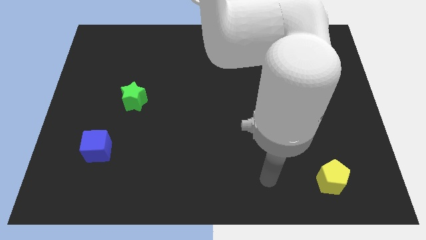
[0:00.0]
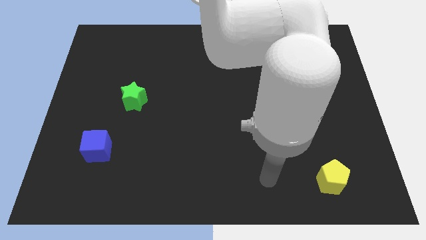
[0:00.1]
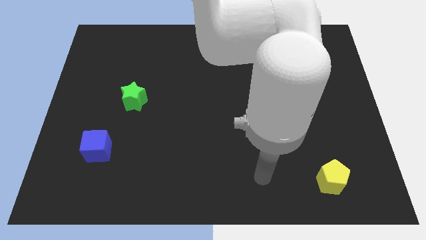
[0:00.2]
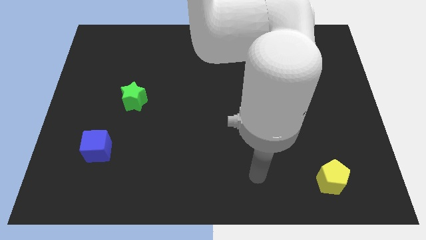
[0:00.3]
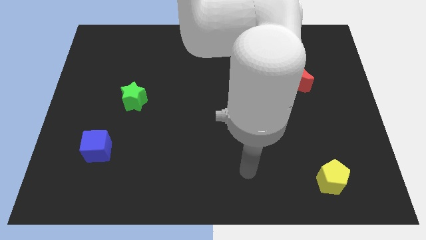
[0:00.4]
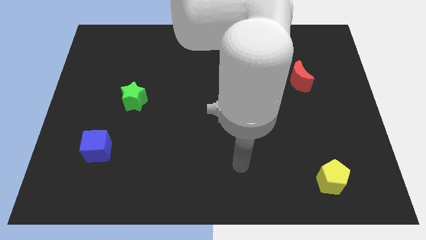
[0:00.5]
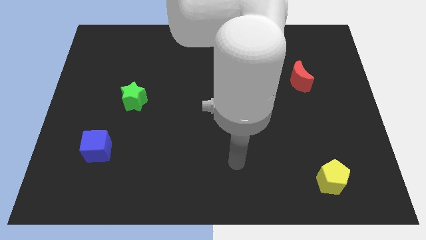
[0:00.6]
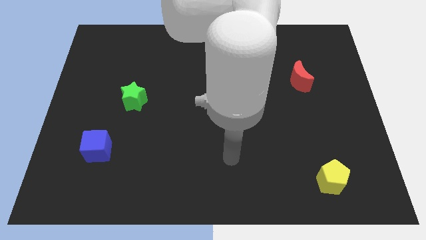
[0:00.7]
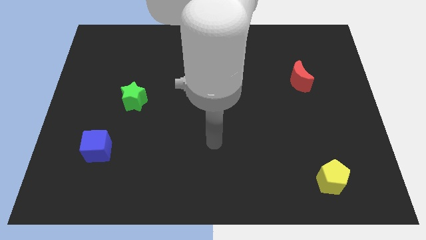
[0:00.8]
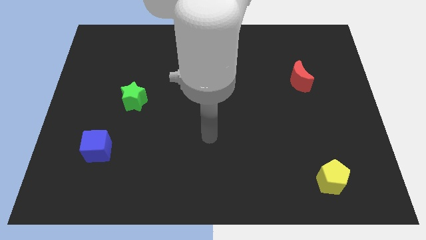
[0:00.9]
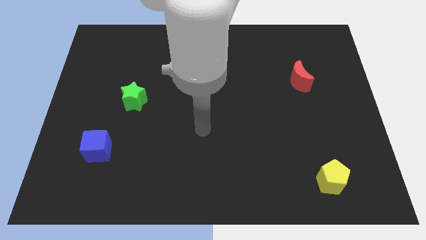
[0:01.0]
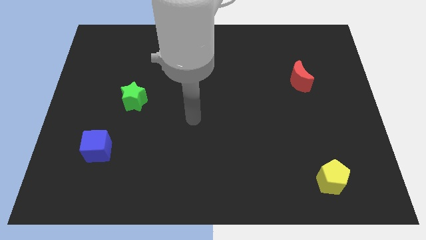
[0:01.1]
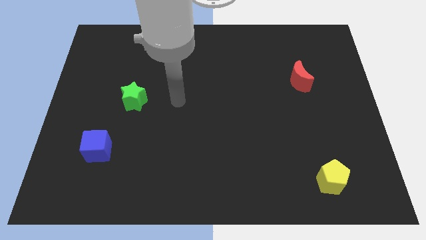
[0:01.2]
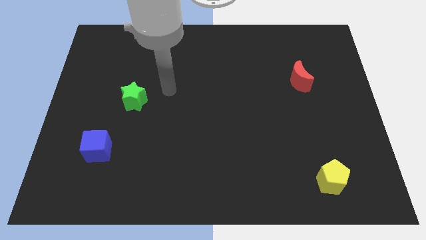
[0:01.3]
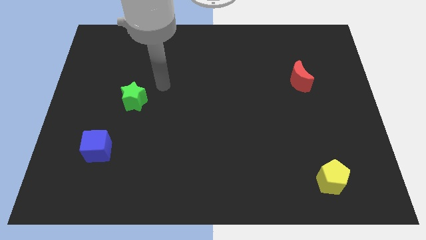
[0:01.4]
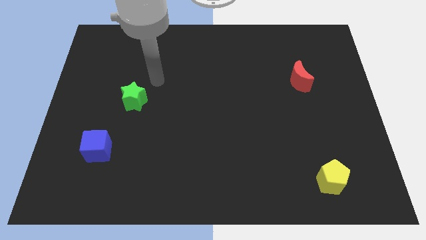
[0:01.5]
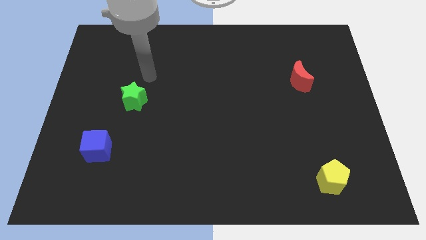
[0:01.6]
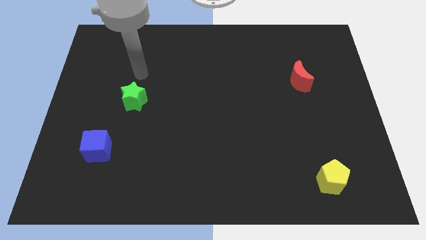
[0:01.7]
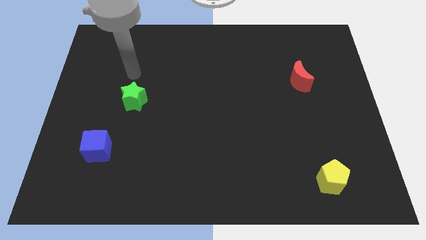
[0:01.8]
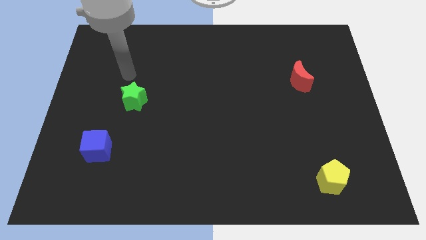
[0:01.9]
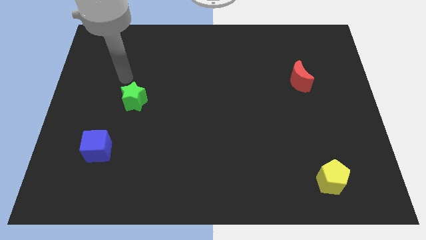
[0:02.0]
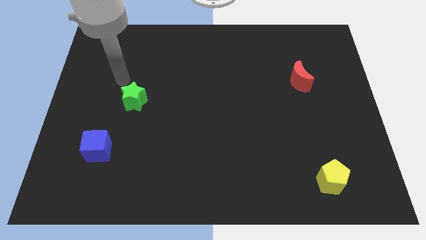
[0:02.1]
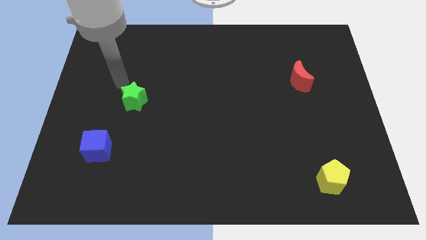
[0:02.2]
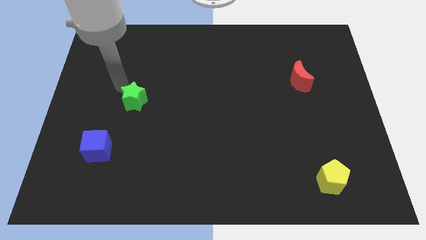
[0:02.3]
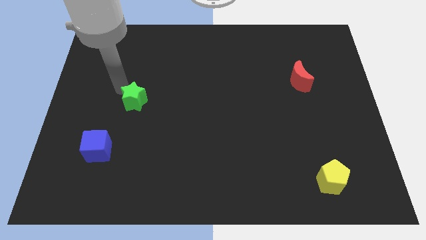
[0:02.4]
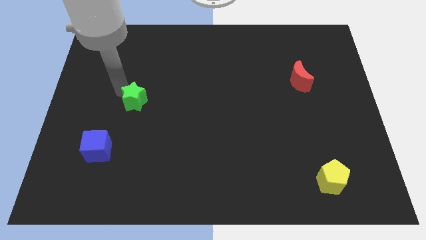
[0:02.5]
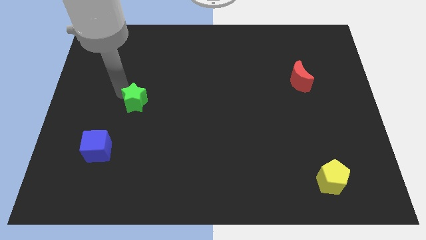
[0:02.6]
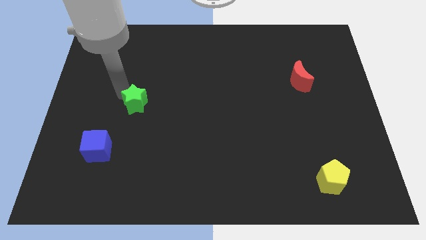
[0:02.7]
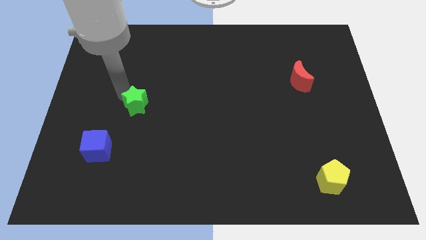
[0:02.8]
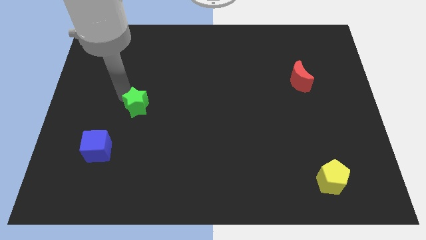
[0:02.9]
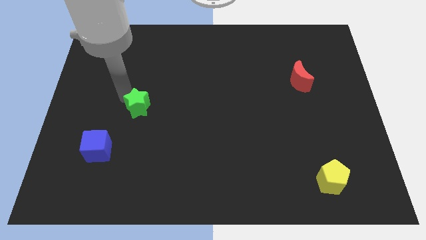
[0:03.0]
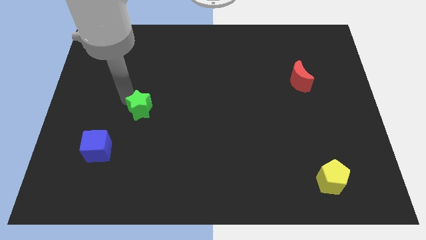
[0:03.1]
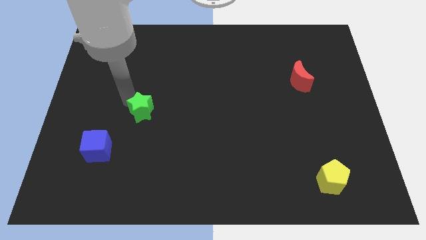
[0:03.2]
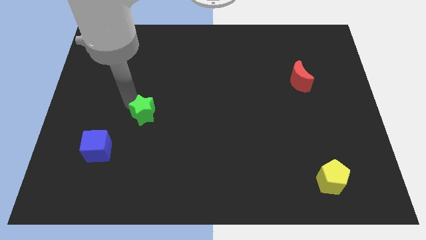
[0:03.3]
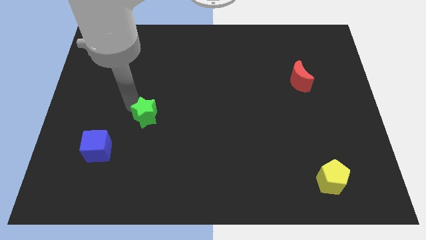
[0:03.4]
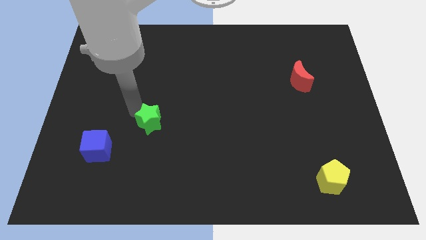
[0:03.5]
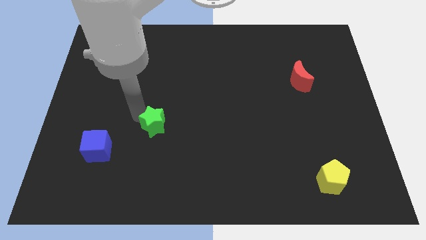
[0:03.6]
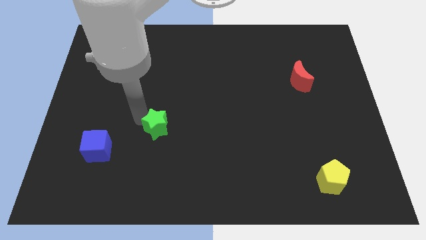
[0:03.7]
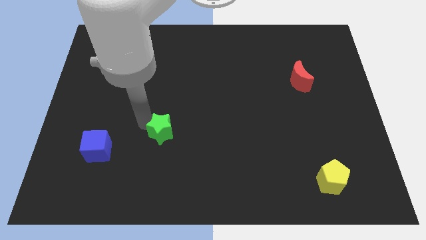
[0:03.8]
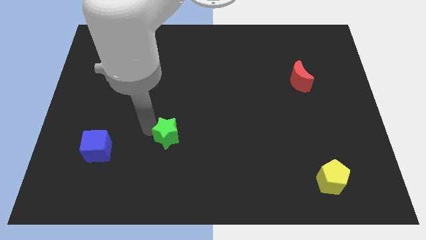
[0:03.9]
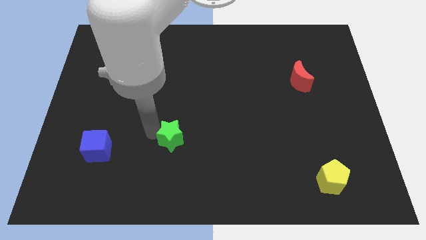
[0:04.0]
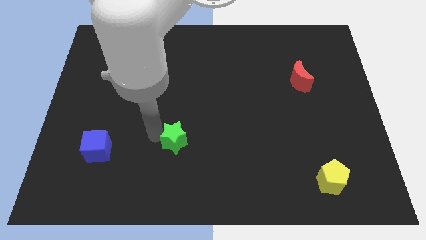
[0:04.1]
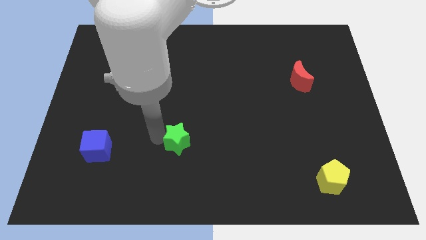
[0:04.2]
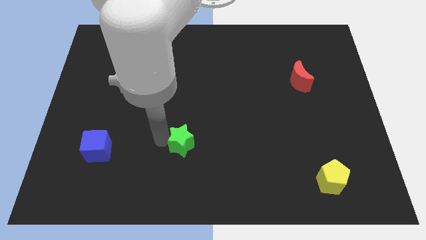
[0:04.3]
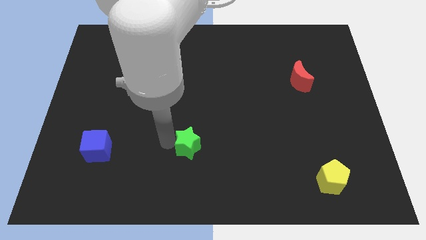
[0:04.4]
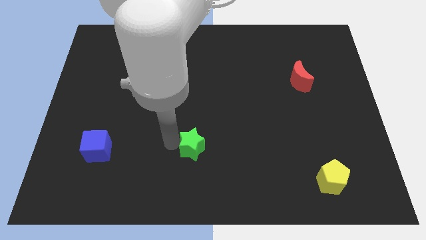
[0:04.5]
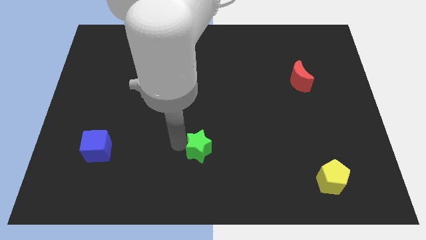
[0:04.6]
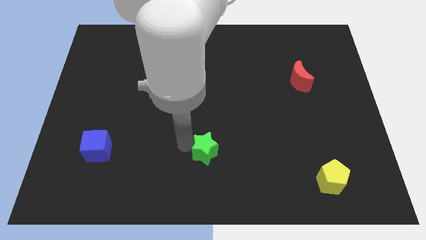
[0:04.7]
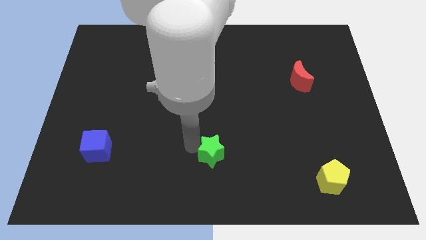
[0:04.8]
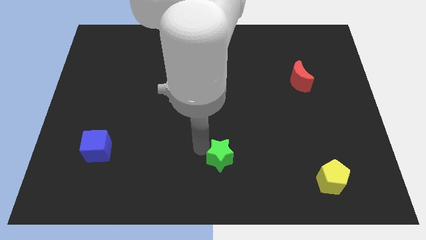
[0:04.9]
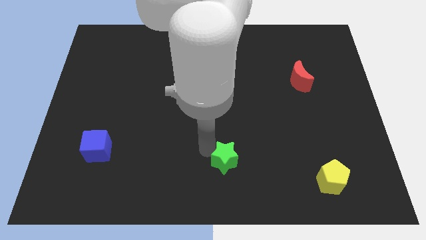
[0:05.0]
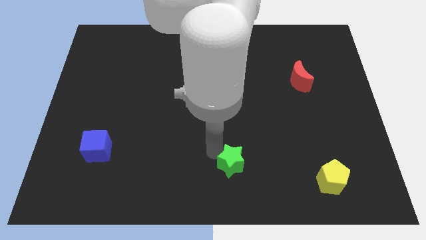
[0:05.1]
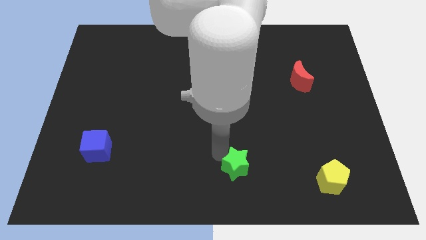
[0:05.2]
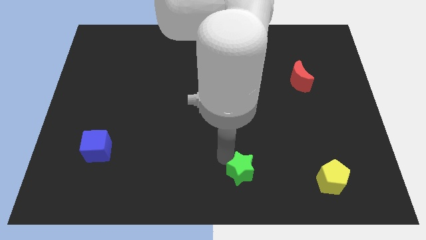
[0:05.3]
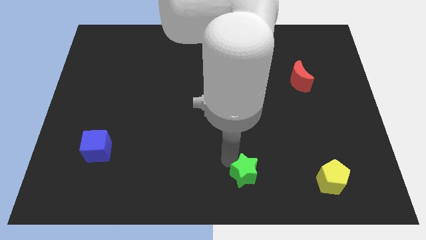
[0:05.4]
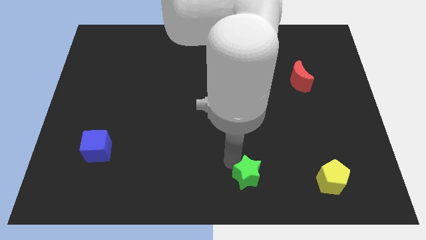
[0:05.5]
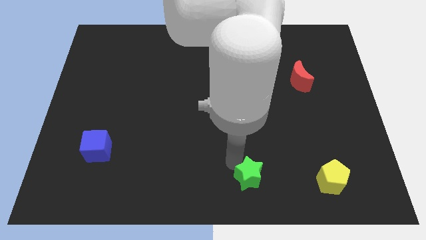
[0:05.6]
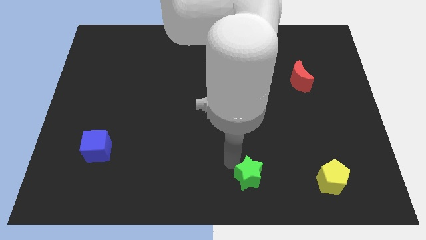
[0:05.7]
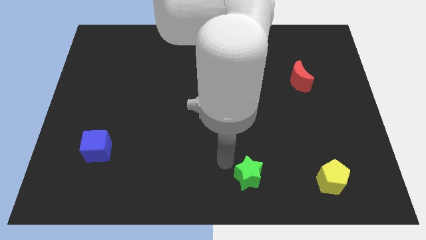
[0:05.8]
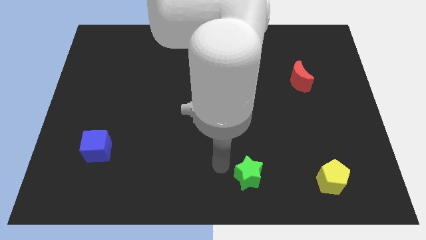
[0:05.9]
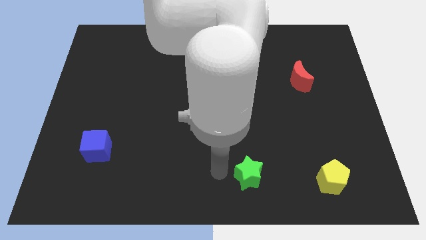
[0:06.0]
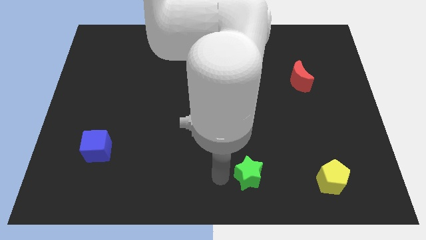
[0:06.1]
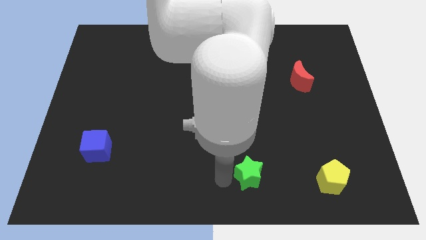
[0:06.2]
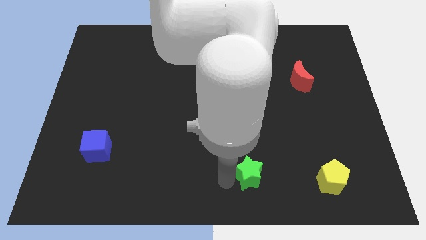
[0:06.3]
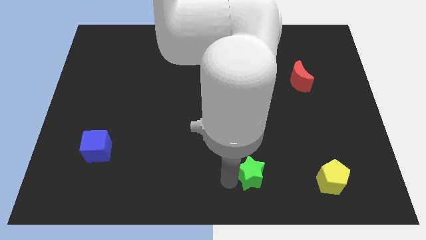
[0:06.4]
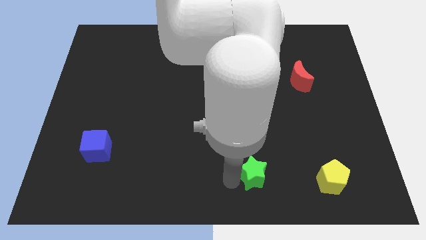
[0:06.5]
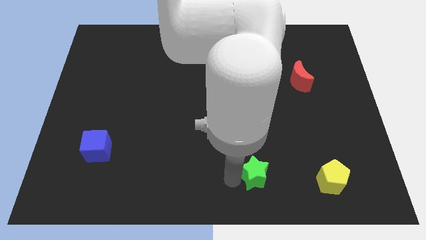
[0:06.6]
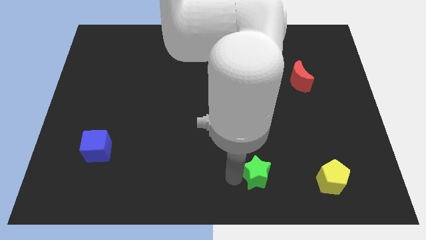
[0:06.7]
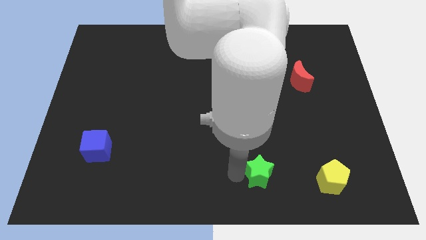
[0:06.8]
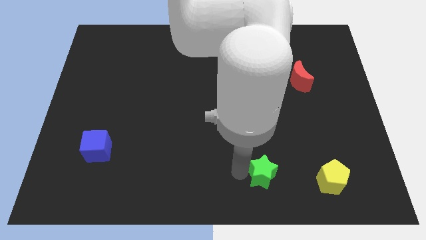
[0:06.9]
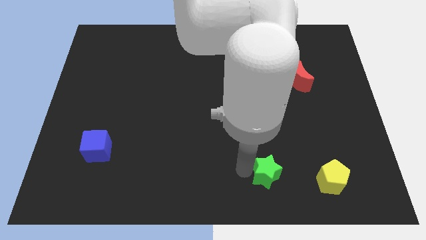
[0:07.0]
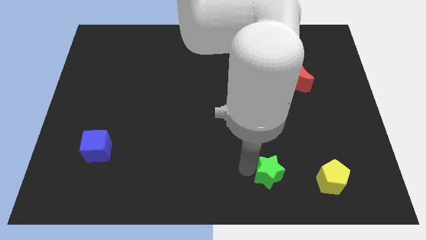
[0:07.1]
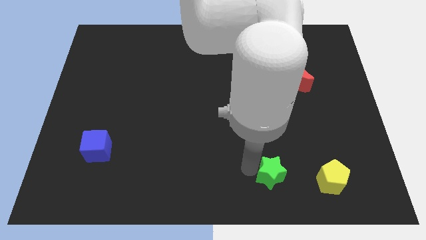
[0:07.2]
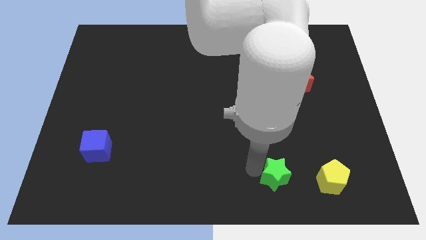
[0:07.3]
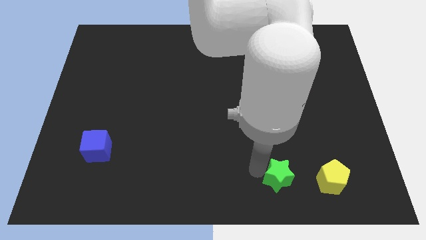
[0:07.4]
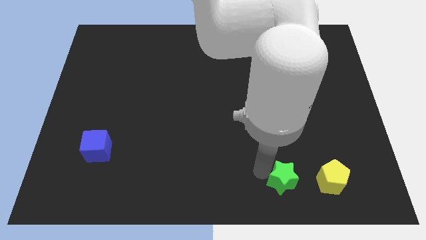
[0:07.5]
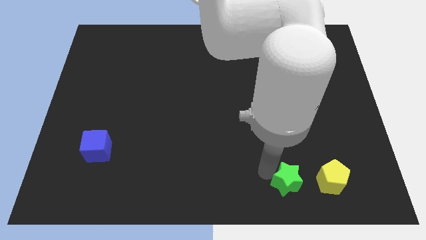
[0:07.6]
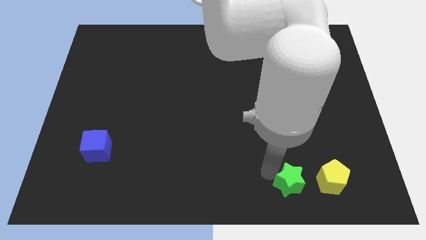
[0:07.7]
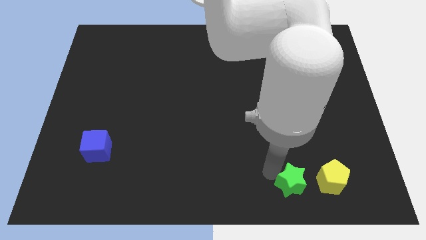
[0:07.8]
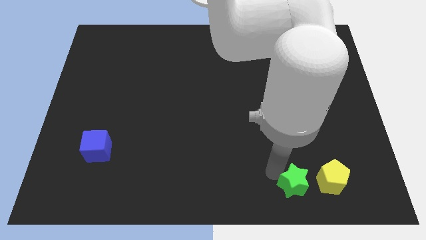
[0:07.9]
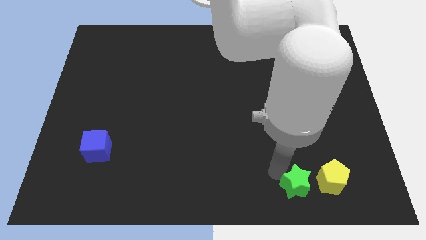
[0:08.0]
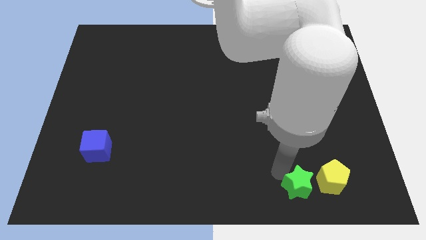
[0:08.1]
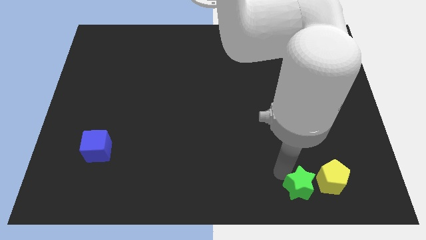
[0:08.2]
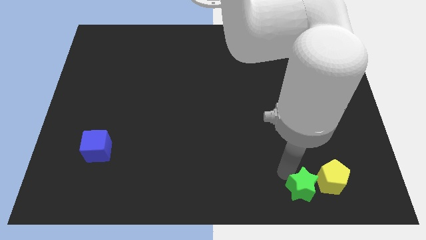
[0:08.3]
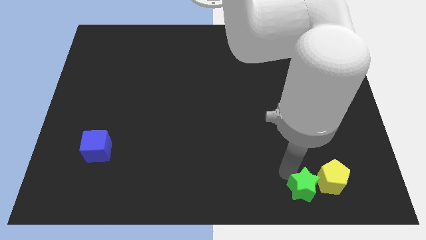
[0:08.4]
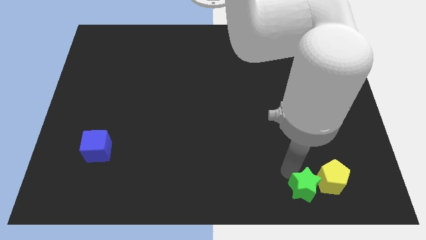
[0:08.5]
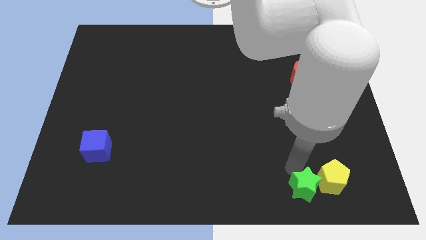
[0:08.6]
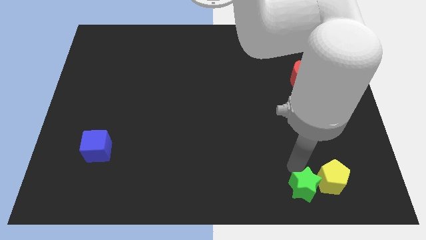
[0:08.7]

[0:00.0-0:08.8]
slide the green star next to the yellow block
